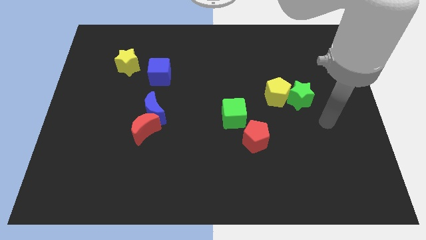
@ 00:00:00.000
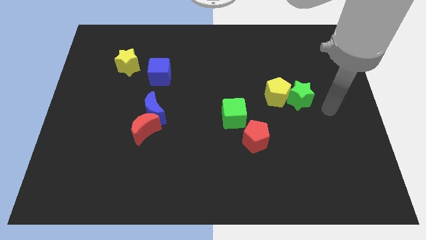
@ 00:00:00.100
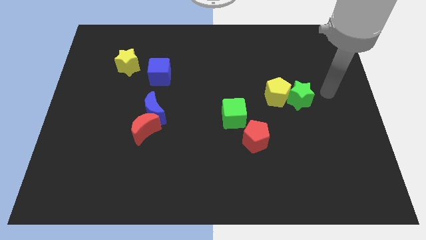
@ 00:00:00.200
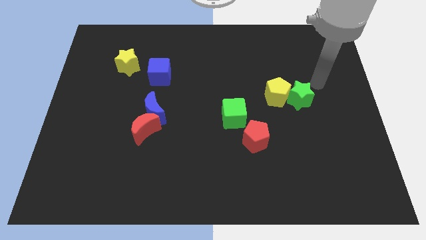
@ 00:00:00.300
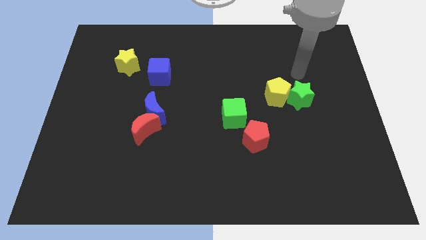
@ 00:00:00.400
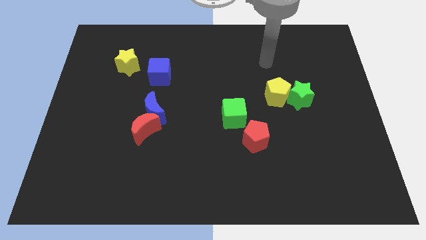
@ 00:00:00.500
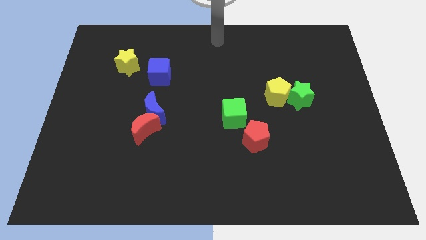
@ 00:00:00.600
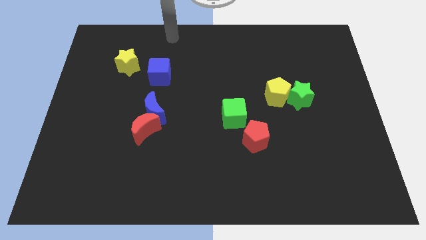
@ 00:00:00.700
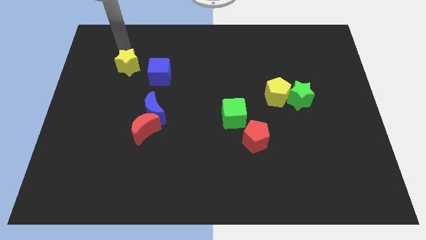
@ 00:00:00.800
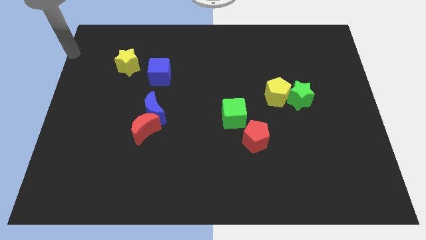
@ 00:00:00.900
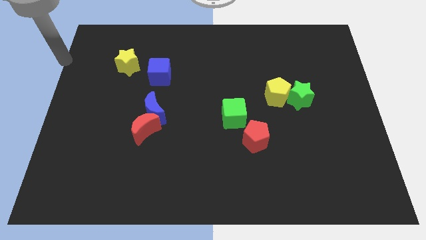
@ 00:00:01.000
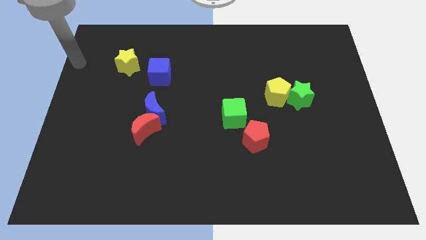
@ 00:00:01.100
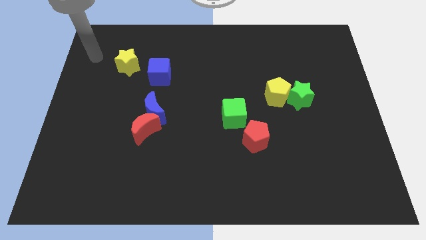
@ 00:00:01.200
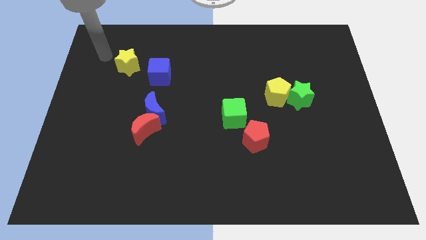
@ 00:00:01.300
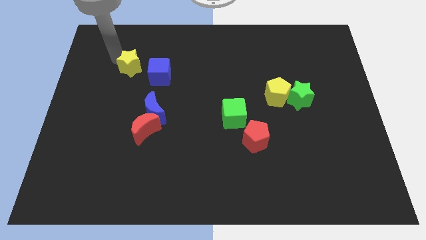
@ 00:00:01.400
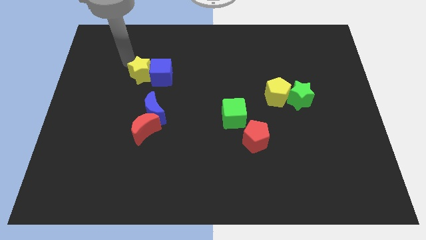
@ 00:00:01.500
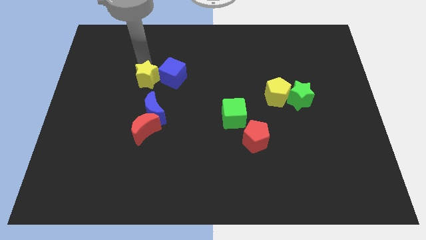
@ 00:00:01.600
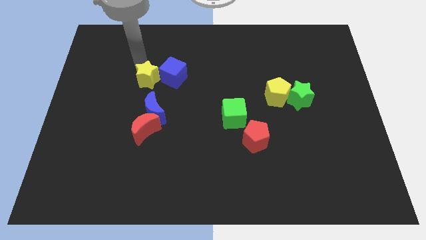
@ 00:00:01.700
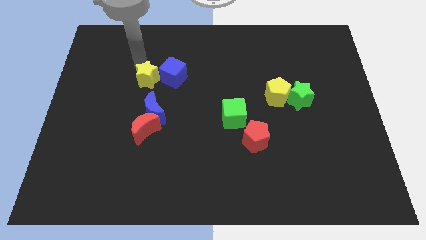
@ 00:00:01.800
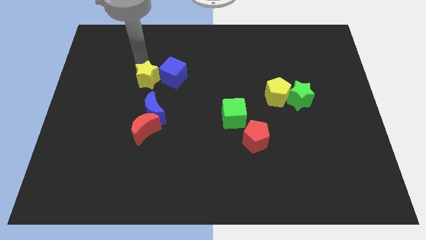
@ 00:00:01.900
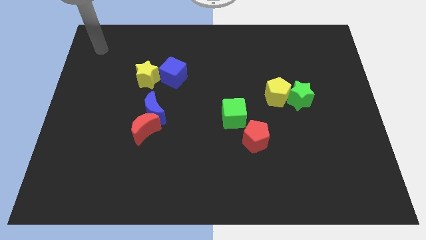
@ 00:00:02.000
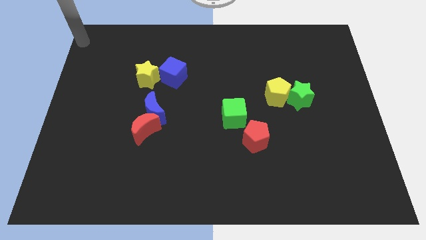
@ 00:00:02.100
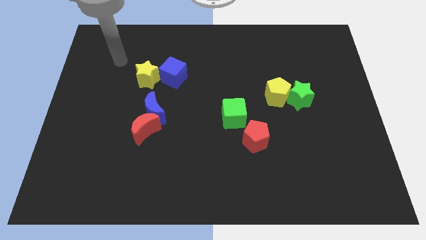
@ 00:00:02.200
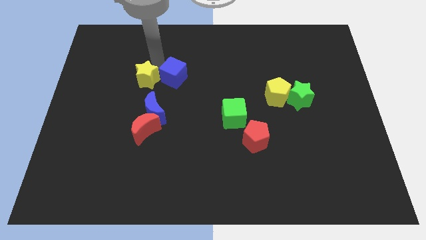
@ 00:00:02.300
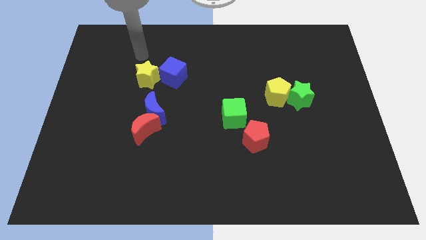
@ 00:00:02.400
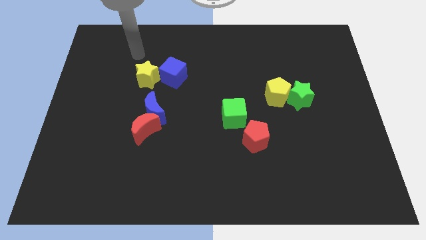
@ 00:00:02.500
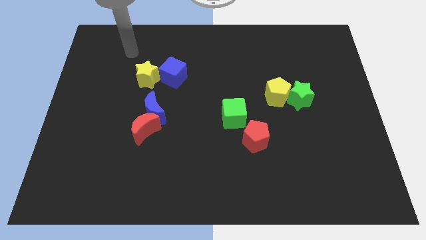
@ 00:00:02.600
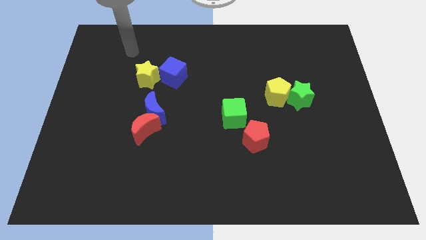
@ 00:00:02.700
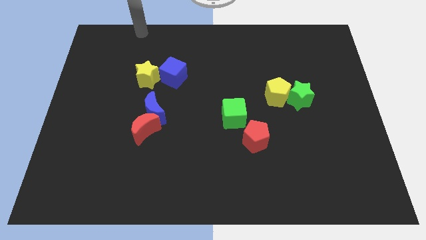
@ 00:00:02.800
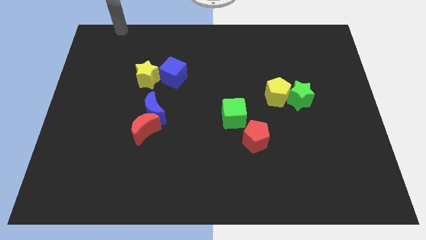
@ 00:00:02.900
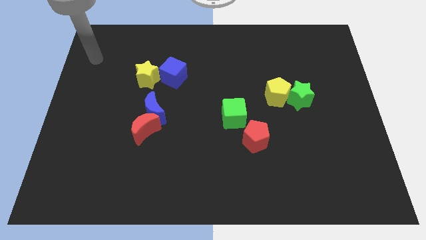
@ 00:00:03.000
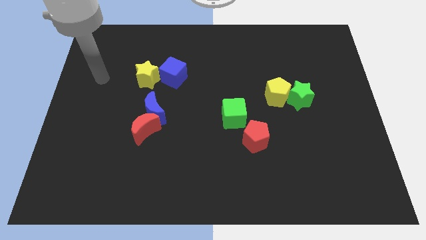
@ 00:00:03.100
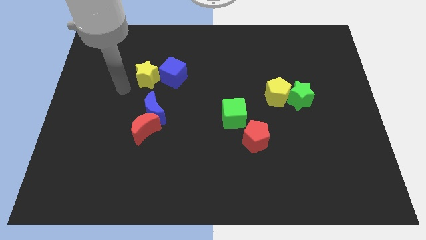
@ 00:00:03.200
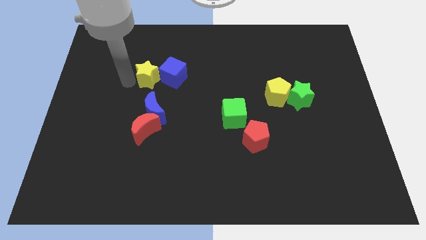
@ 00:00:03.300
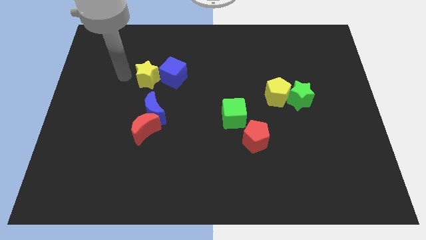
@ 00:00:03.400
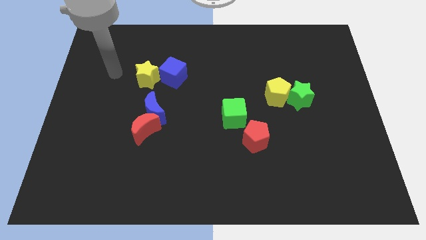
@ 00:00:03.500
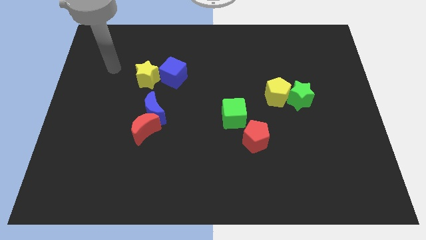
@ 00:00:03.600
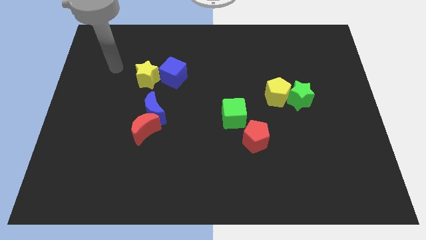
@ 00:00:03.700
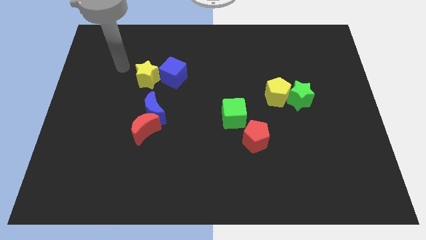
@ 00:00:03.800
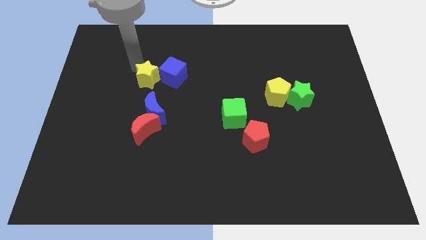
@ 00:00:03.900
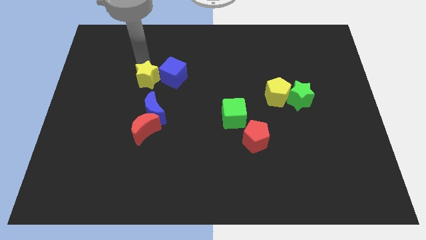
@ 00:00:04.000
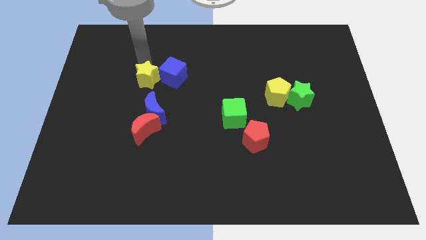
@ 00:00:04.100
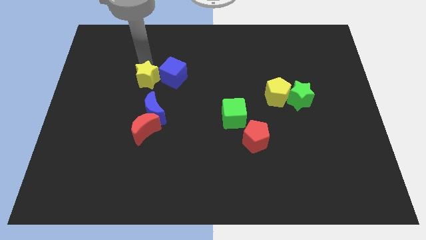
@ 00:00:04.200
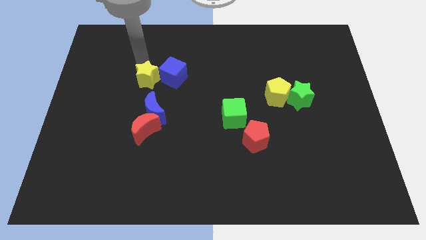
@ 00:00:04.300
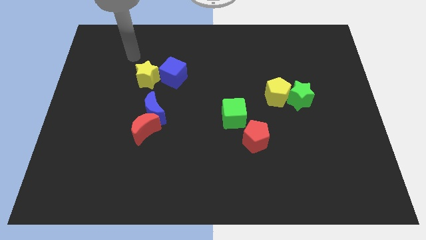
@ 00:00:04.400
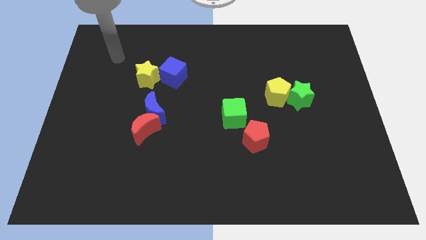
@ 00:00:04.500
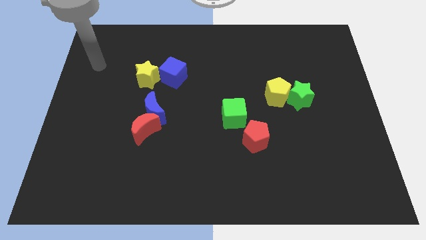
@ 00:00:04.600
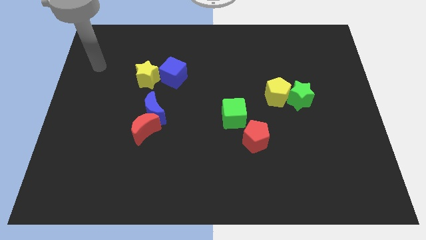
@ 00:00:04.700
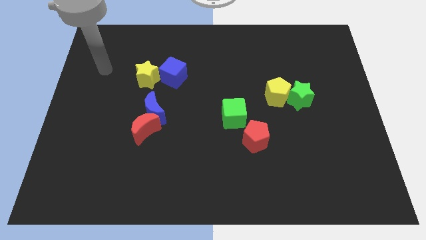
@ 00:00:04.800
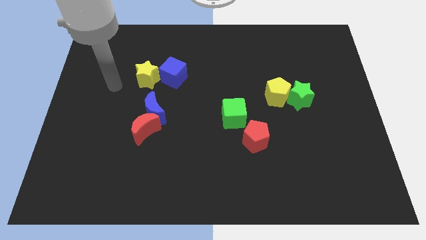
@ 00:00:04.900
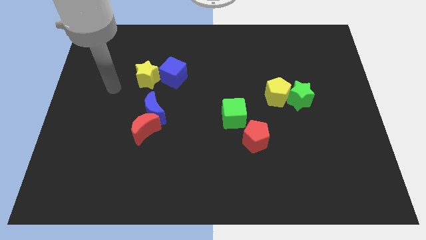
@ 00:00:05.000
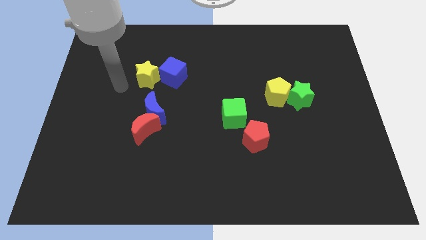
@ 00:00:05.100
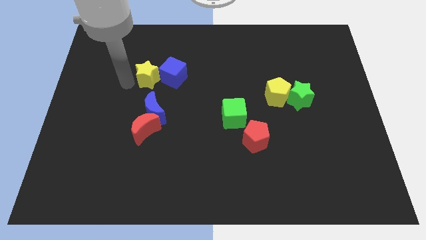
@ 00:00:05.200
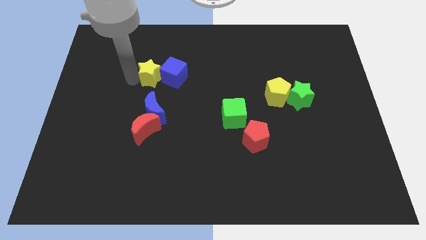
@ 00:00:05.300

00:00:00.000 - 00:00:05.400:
push the yellow star close to the blue cube

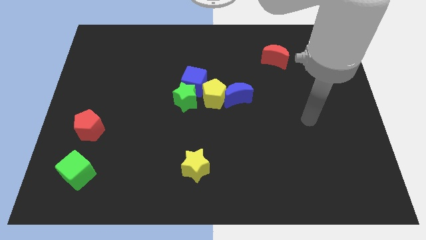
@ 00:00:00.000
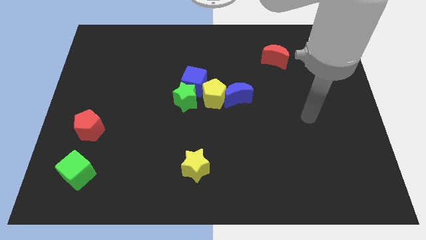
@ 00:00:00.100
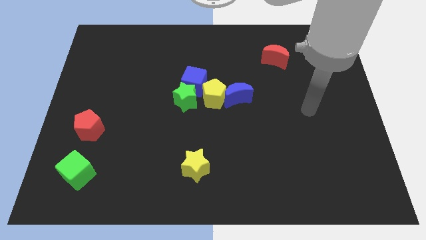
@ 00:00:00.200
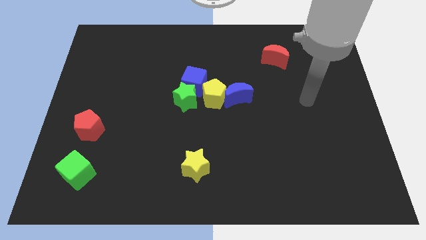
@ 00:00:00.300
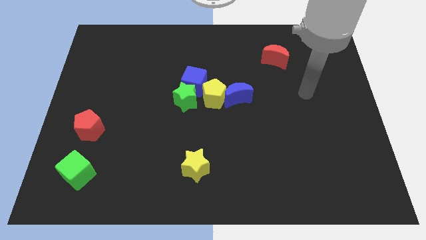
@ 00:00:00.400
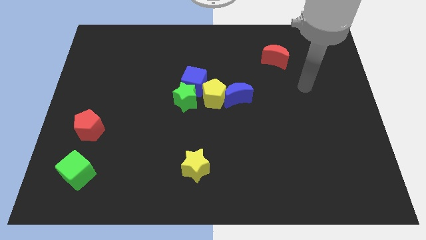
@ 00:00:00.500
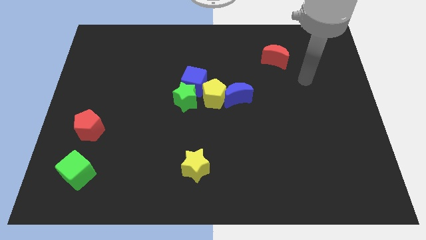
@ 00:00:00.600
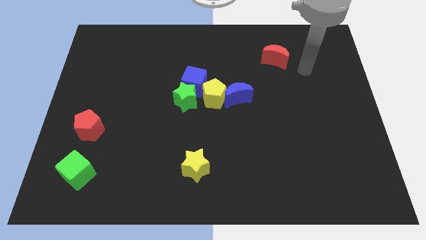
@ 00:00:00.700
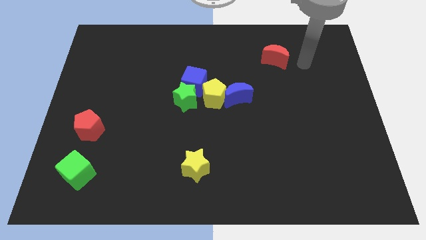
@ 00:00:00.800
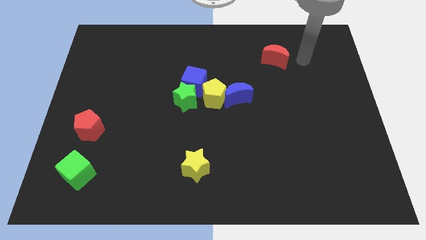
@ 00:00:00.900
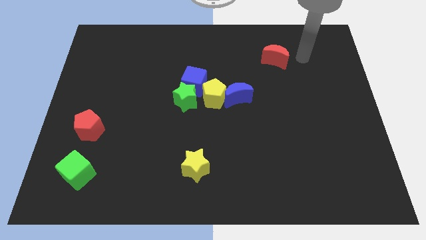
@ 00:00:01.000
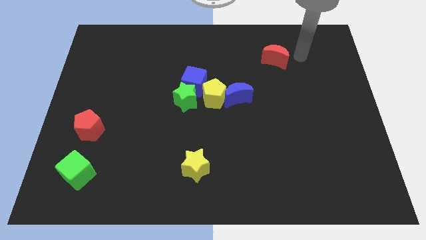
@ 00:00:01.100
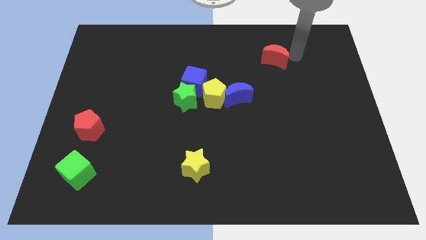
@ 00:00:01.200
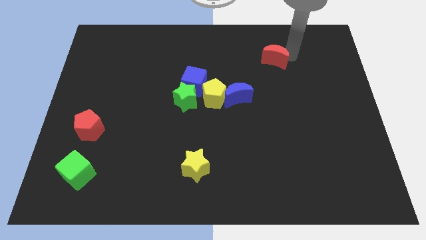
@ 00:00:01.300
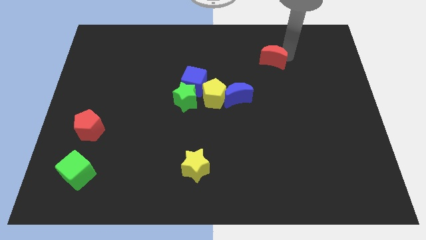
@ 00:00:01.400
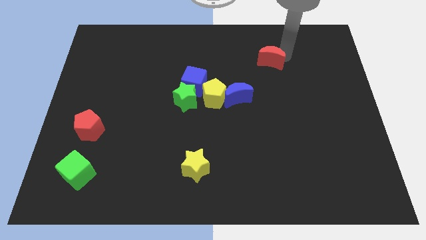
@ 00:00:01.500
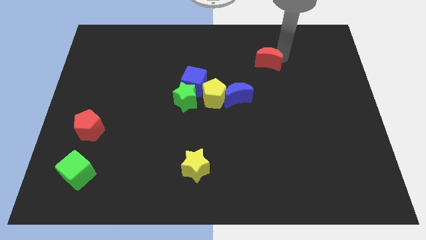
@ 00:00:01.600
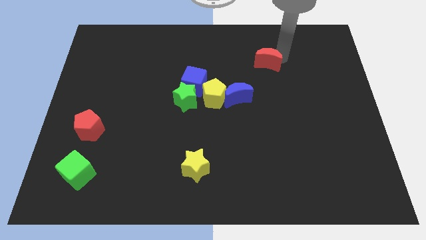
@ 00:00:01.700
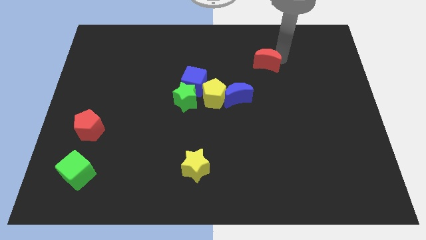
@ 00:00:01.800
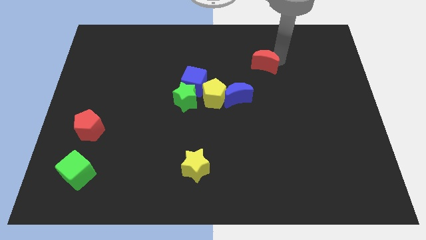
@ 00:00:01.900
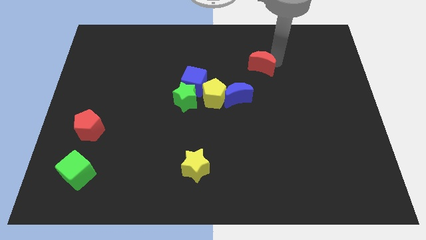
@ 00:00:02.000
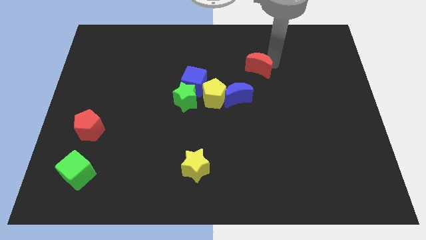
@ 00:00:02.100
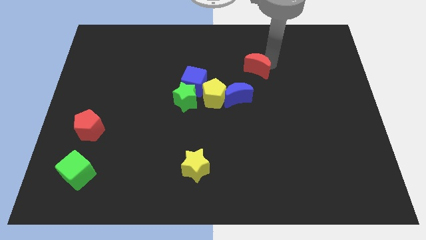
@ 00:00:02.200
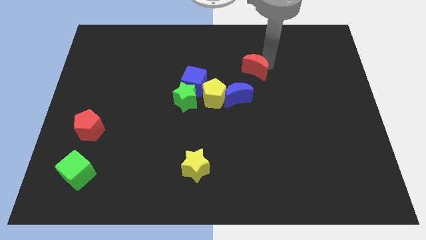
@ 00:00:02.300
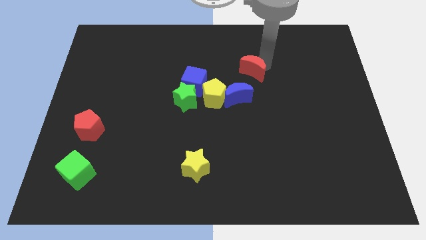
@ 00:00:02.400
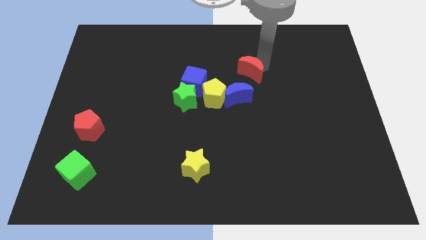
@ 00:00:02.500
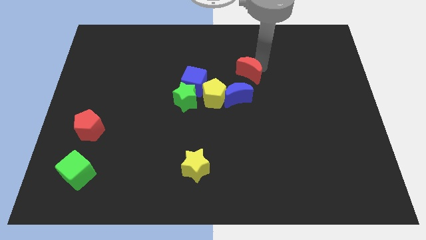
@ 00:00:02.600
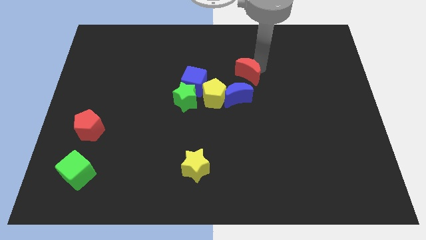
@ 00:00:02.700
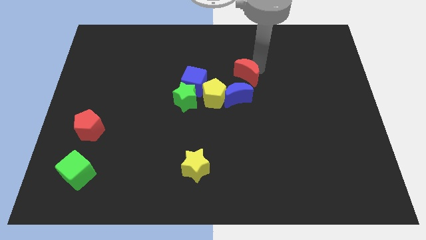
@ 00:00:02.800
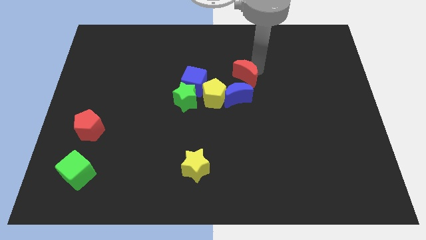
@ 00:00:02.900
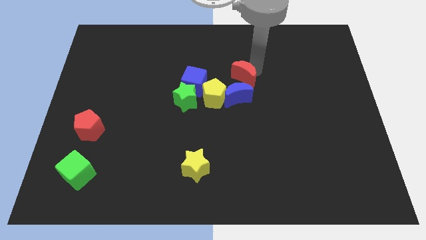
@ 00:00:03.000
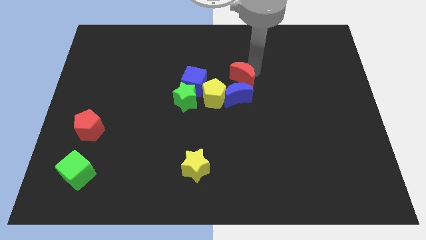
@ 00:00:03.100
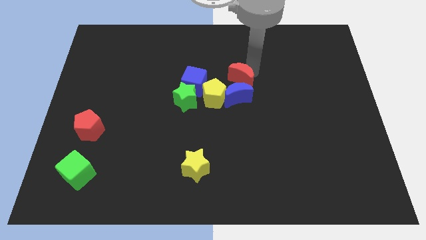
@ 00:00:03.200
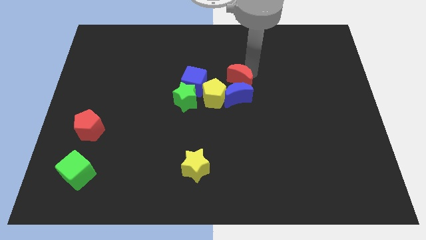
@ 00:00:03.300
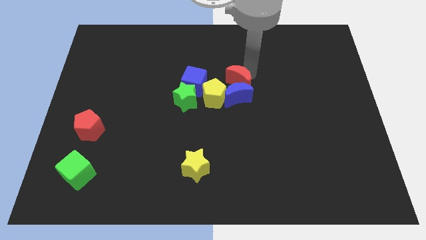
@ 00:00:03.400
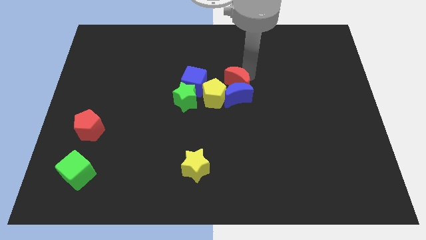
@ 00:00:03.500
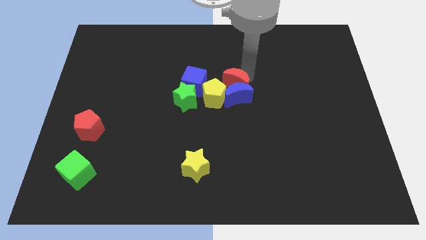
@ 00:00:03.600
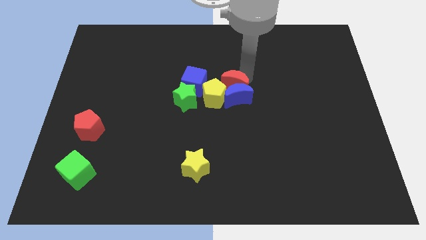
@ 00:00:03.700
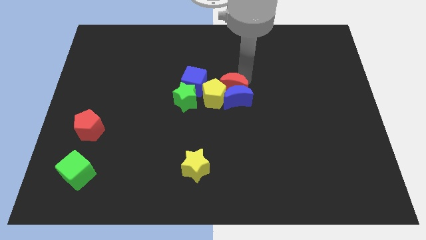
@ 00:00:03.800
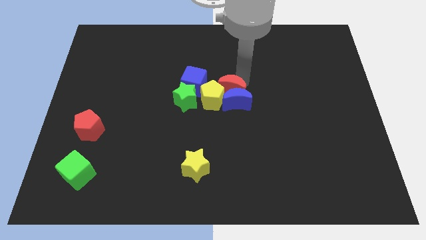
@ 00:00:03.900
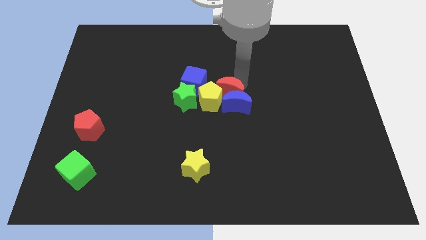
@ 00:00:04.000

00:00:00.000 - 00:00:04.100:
slide the red moon close to the yellow pentagon
